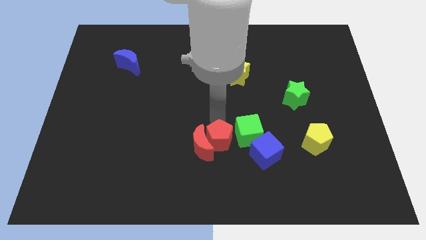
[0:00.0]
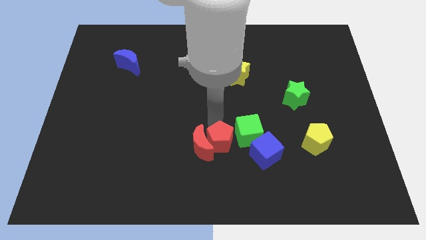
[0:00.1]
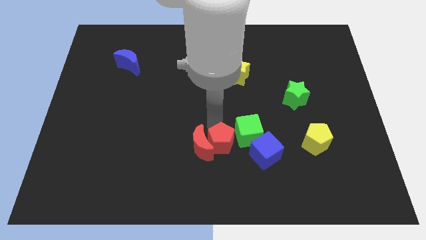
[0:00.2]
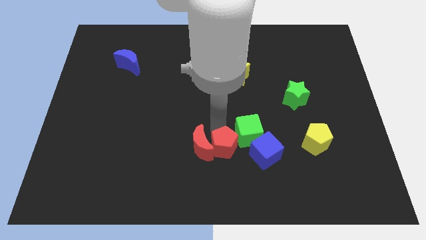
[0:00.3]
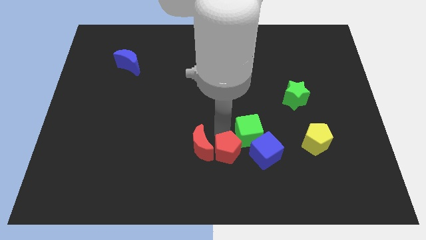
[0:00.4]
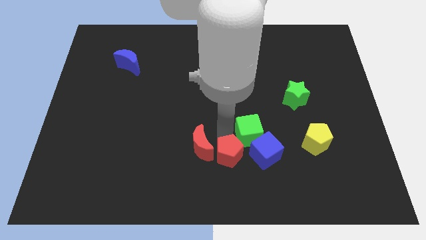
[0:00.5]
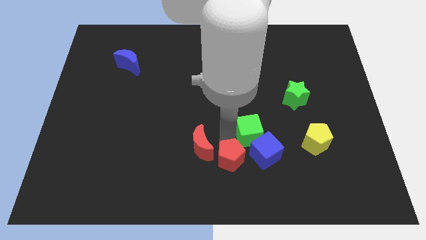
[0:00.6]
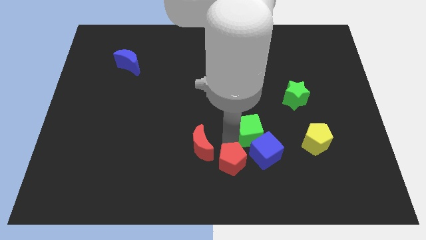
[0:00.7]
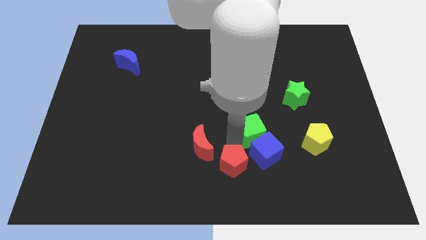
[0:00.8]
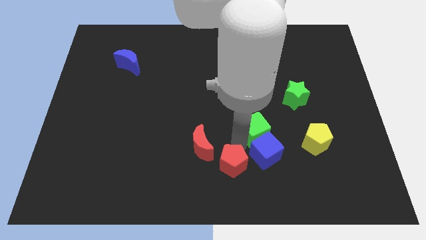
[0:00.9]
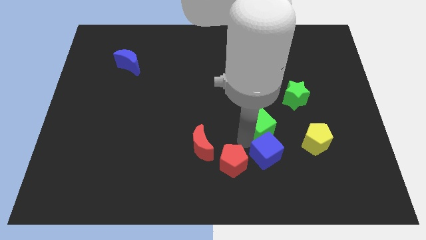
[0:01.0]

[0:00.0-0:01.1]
place the red pentagon at the left side of the blue cube

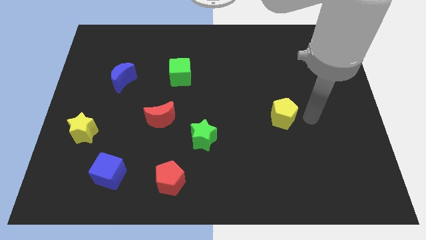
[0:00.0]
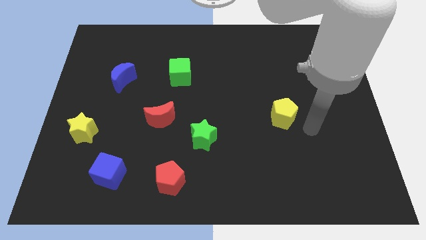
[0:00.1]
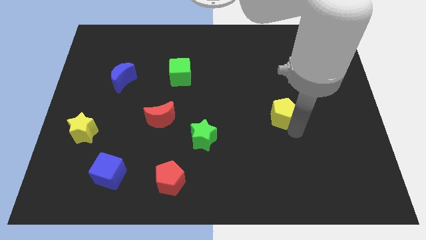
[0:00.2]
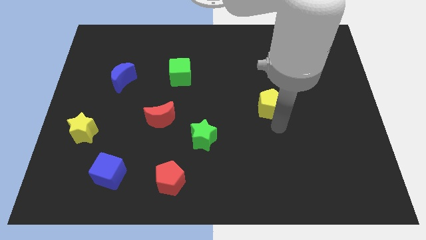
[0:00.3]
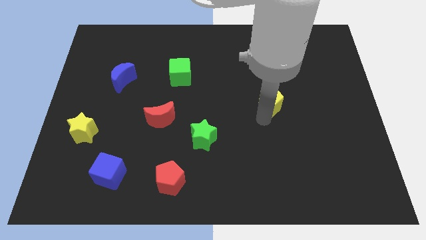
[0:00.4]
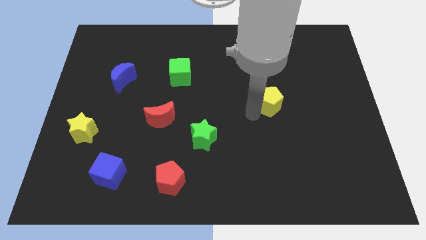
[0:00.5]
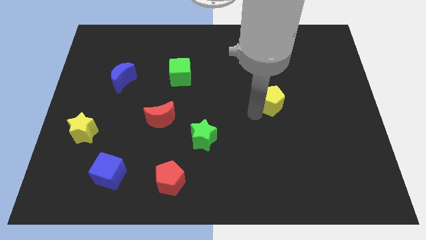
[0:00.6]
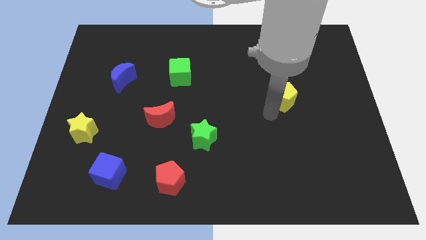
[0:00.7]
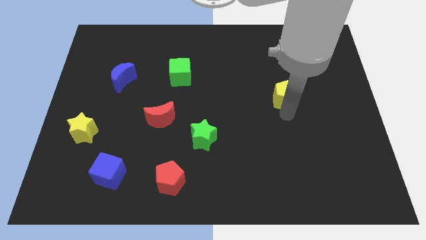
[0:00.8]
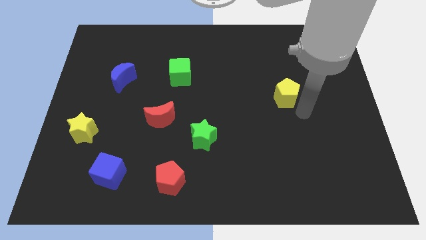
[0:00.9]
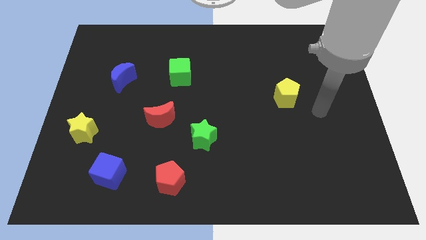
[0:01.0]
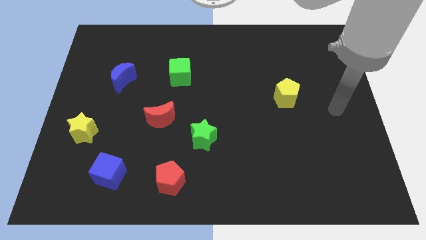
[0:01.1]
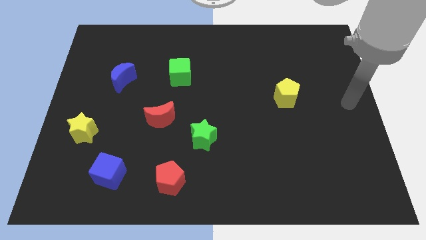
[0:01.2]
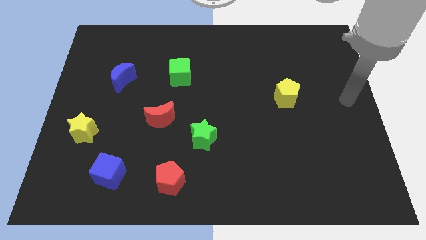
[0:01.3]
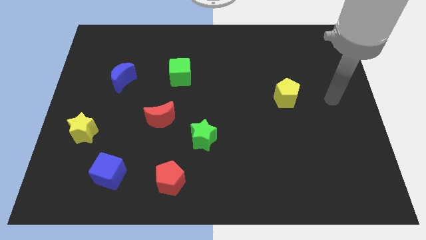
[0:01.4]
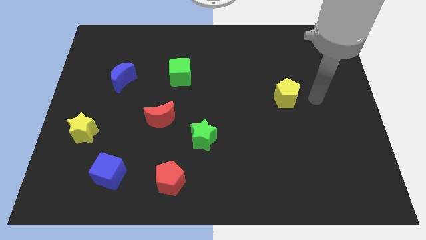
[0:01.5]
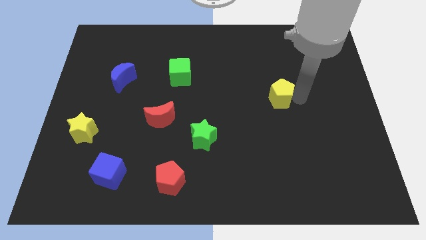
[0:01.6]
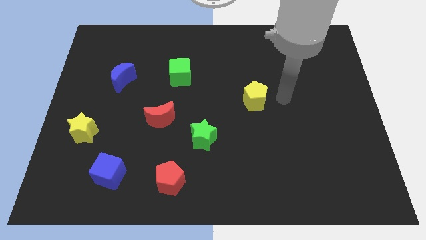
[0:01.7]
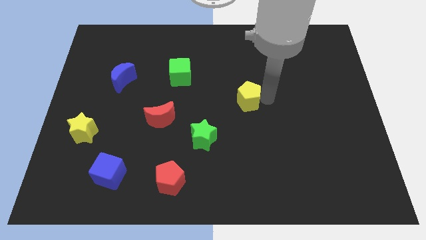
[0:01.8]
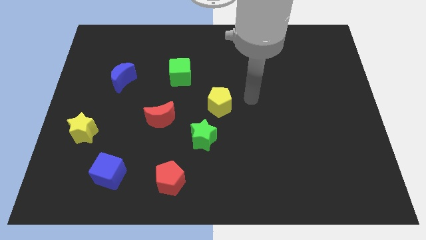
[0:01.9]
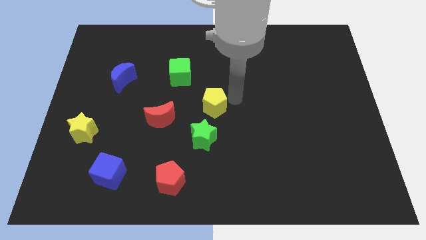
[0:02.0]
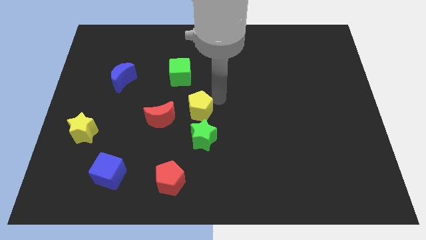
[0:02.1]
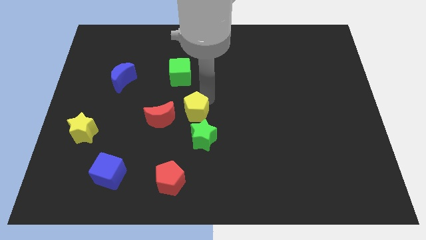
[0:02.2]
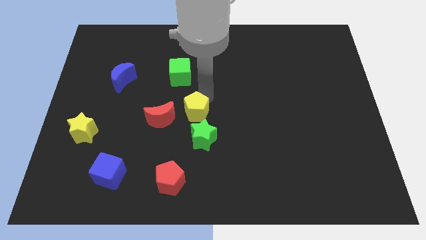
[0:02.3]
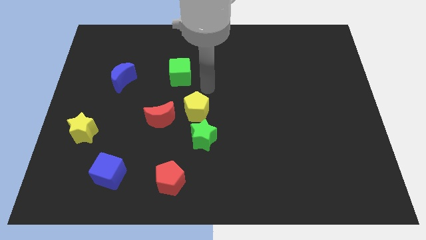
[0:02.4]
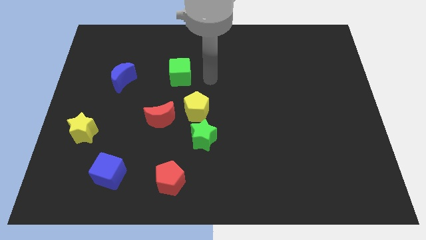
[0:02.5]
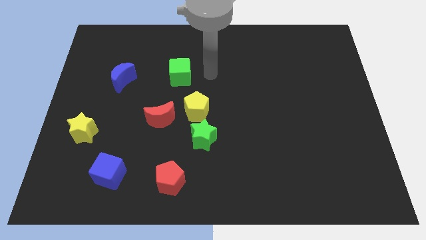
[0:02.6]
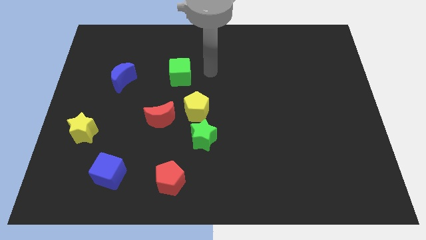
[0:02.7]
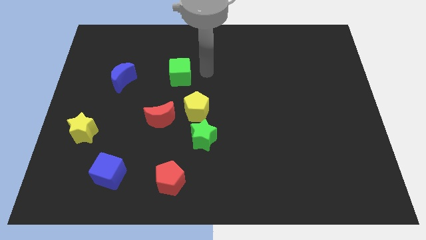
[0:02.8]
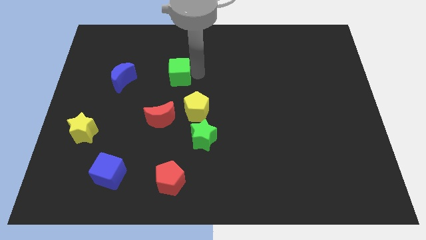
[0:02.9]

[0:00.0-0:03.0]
push the yellow pentagon to the top left side of the green star

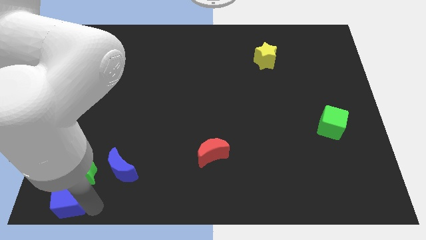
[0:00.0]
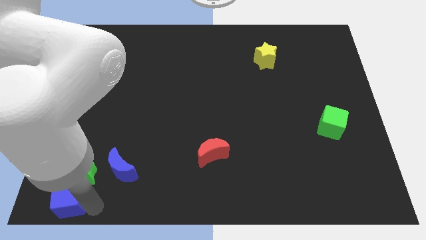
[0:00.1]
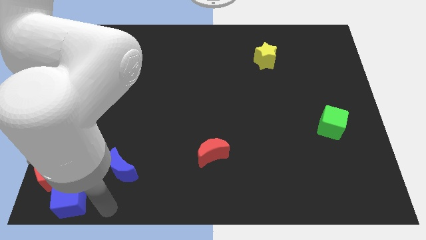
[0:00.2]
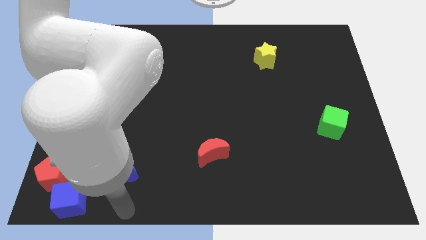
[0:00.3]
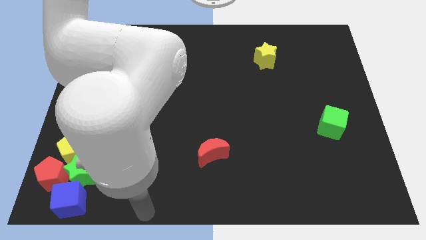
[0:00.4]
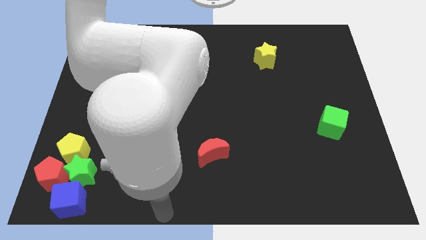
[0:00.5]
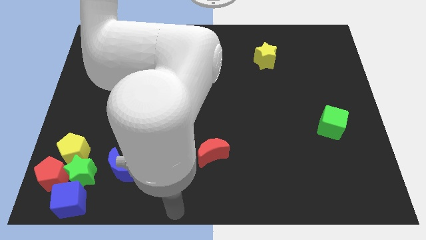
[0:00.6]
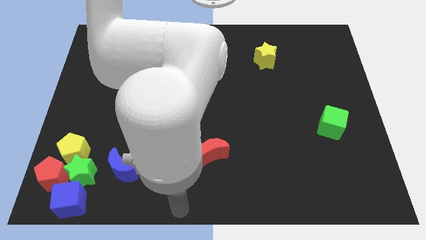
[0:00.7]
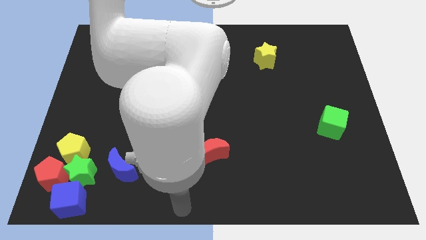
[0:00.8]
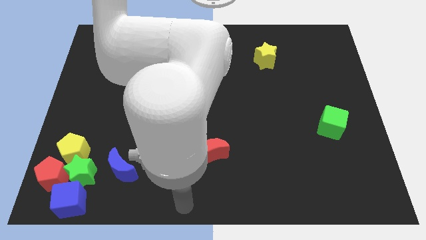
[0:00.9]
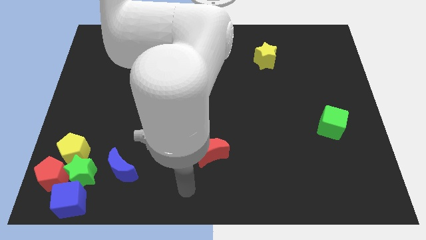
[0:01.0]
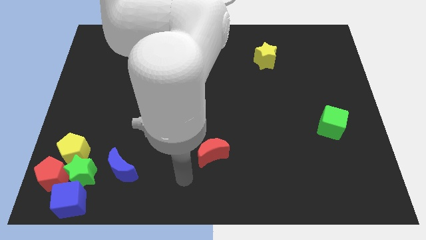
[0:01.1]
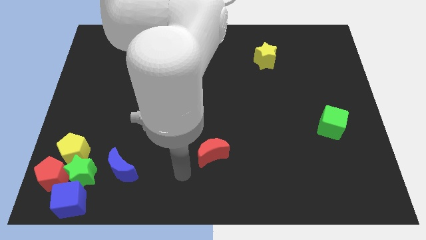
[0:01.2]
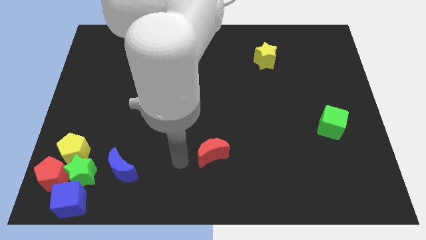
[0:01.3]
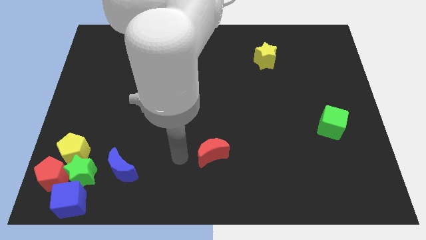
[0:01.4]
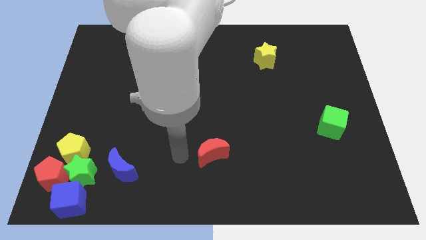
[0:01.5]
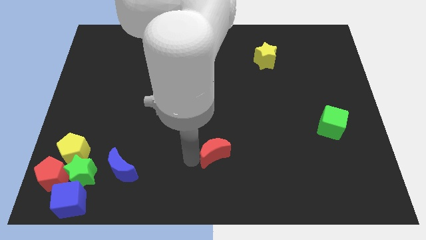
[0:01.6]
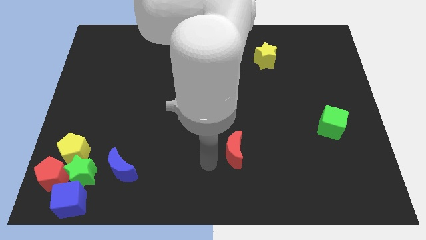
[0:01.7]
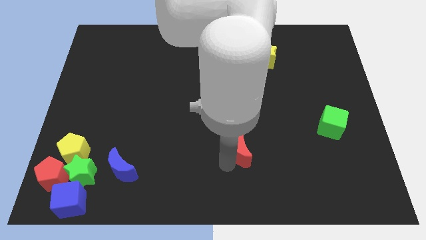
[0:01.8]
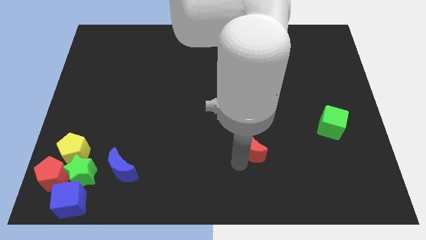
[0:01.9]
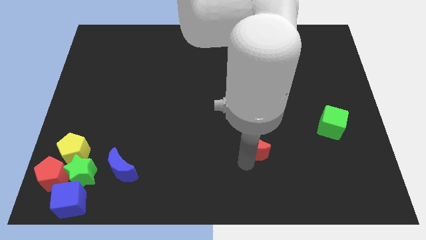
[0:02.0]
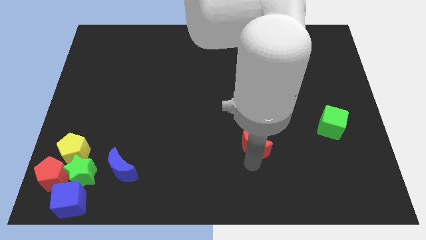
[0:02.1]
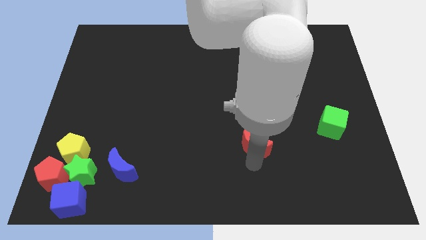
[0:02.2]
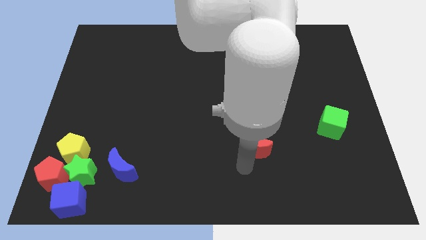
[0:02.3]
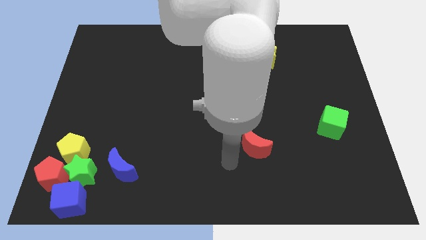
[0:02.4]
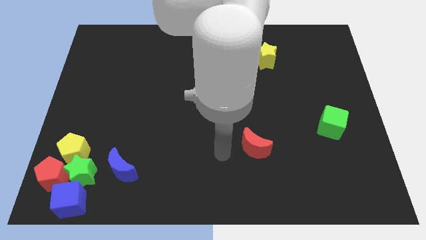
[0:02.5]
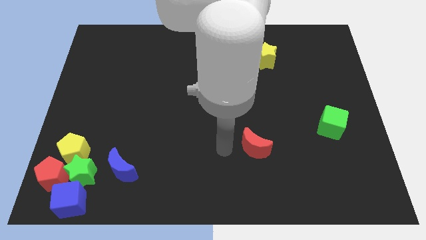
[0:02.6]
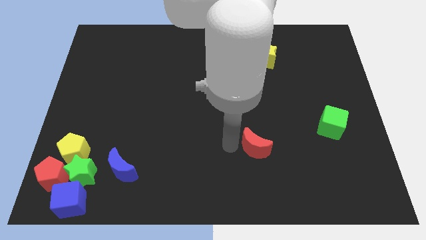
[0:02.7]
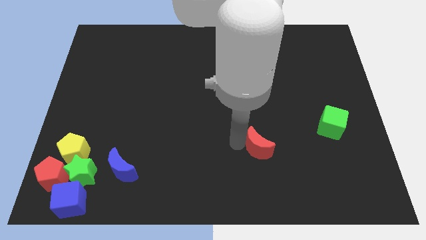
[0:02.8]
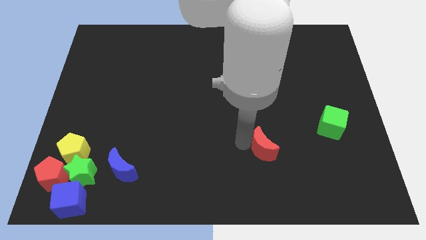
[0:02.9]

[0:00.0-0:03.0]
move the arm away from the blue cube

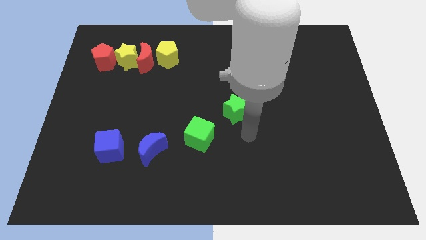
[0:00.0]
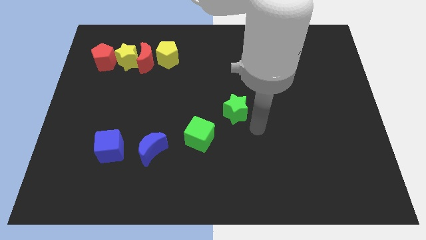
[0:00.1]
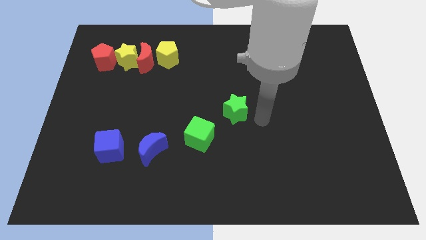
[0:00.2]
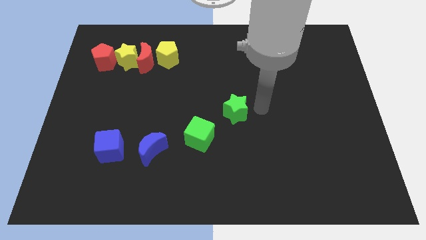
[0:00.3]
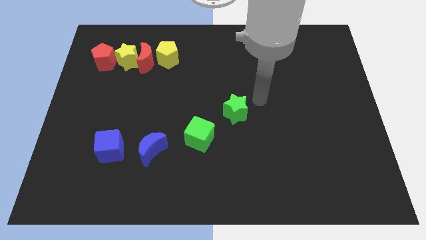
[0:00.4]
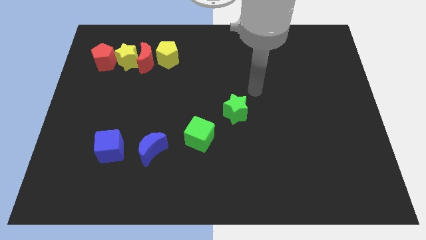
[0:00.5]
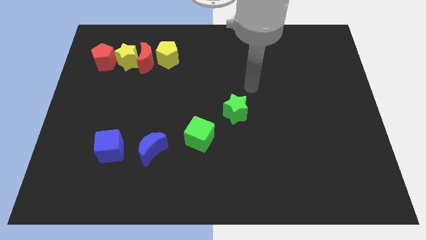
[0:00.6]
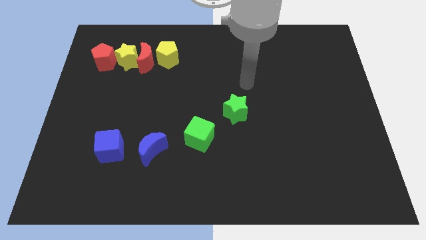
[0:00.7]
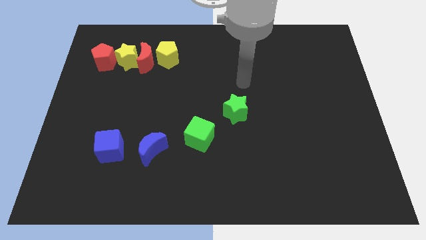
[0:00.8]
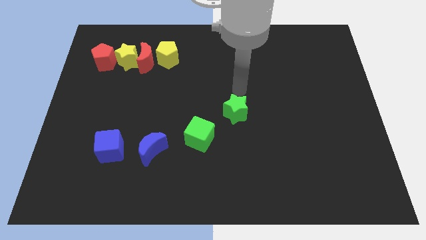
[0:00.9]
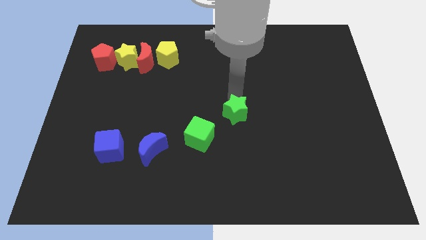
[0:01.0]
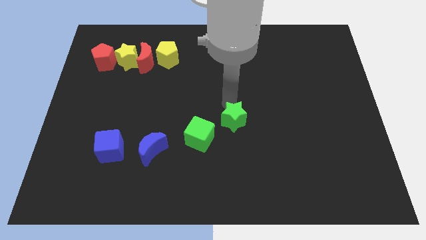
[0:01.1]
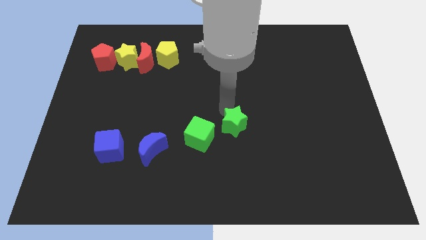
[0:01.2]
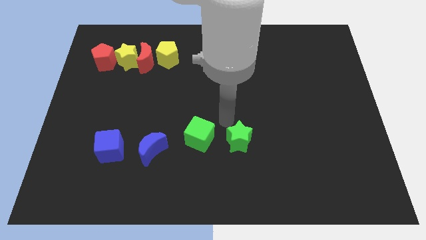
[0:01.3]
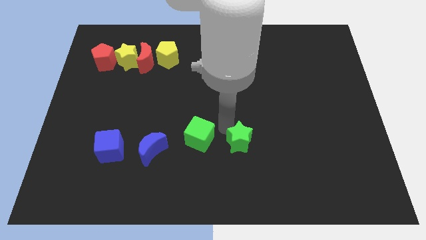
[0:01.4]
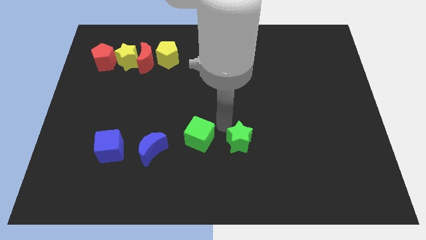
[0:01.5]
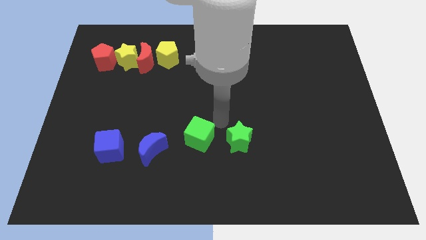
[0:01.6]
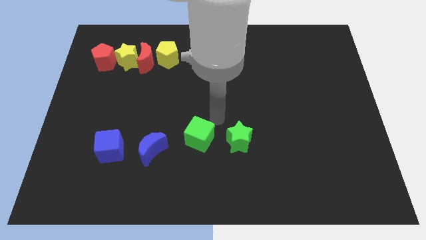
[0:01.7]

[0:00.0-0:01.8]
move the green star to the right of the green cube
